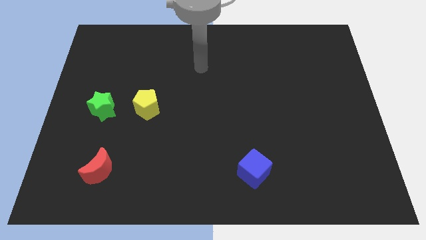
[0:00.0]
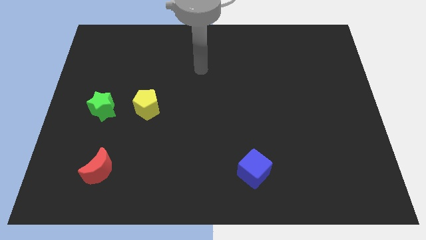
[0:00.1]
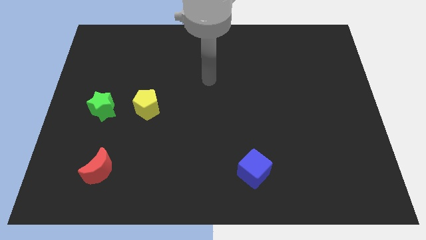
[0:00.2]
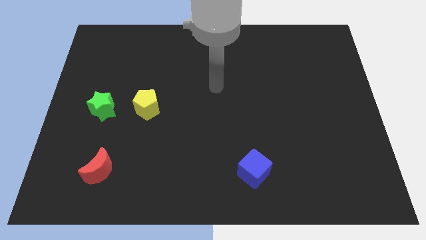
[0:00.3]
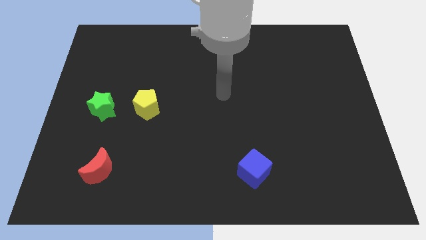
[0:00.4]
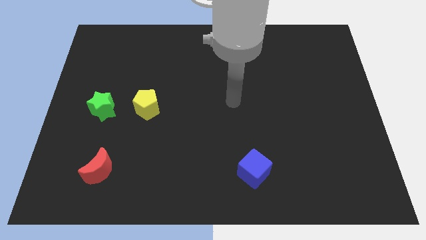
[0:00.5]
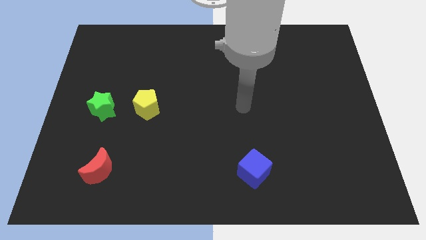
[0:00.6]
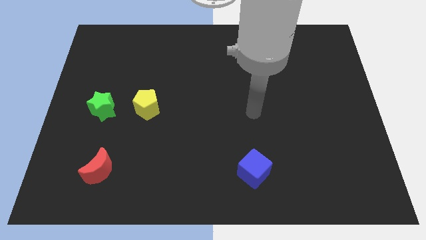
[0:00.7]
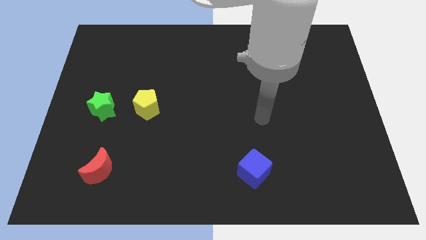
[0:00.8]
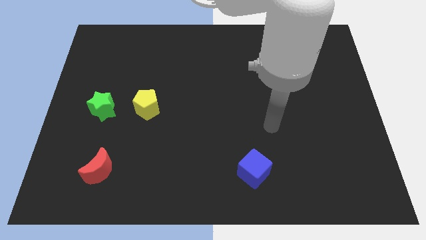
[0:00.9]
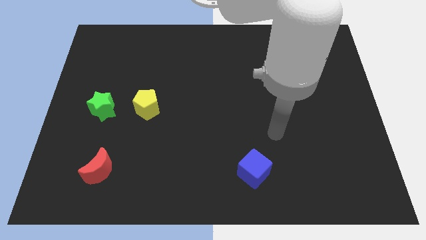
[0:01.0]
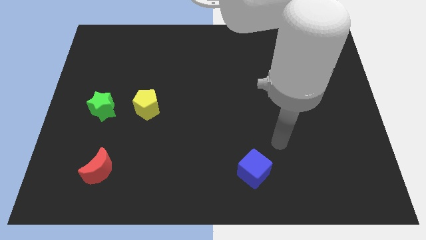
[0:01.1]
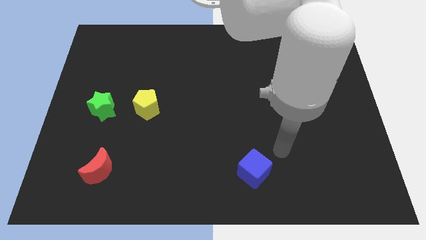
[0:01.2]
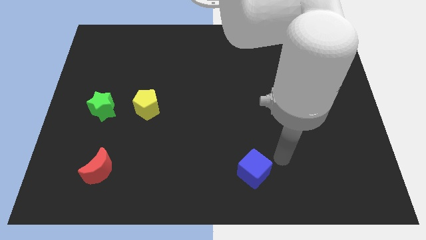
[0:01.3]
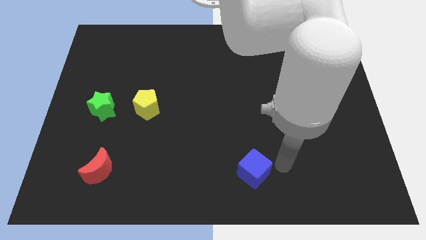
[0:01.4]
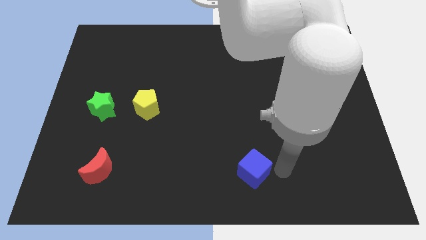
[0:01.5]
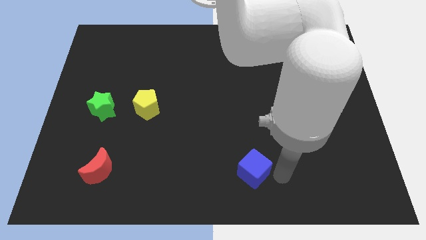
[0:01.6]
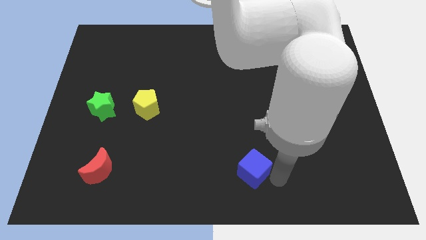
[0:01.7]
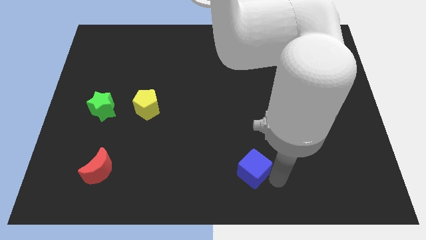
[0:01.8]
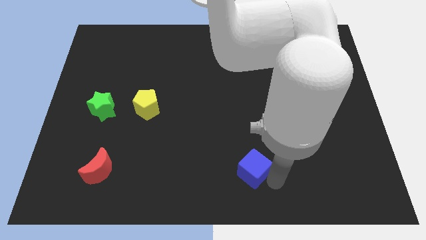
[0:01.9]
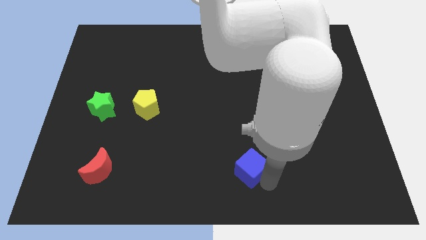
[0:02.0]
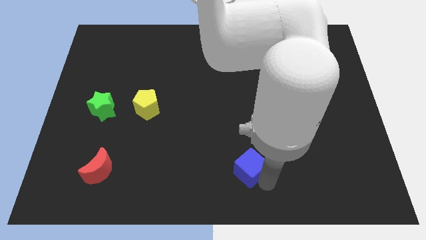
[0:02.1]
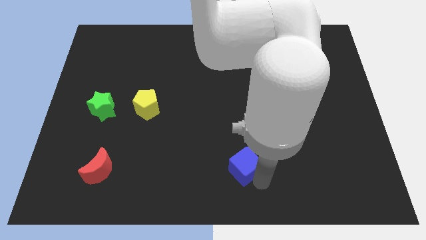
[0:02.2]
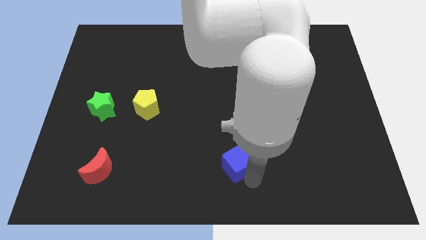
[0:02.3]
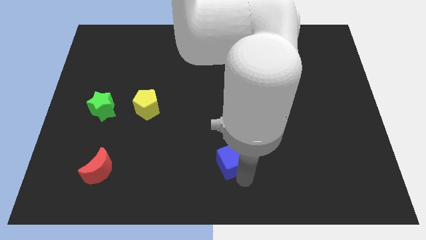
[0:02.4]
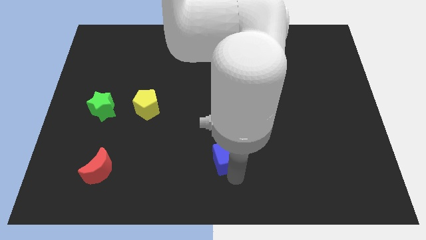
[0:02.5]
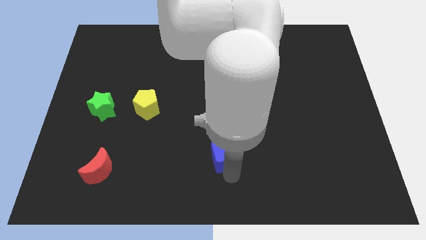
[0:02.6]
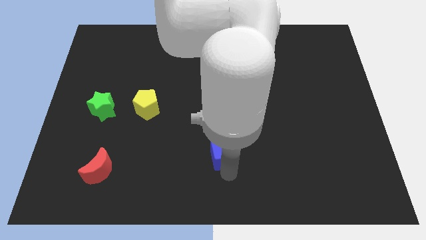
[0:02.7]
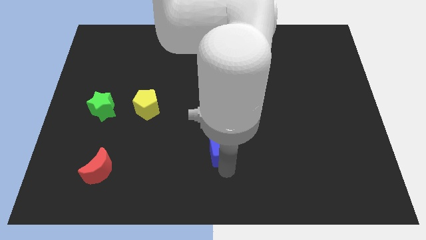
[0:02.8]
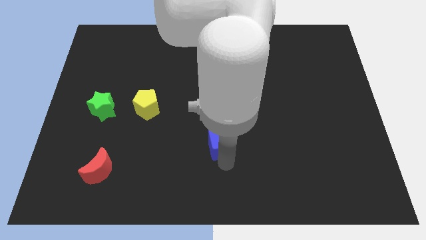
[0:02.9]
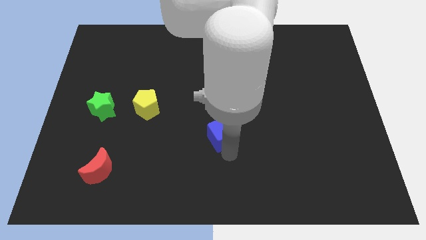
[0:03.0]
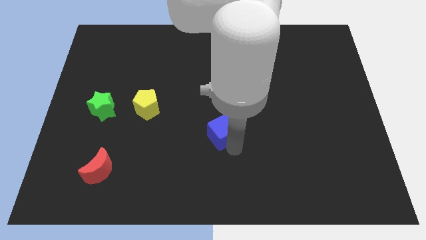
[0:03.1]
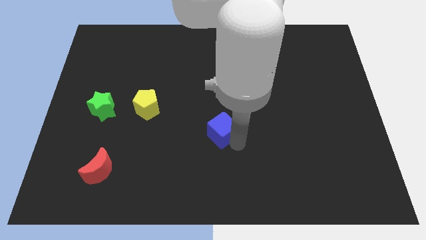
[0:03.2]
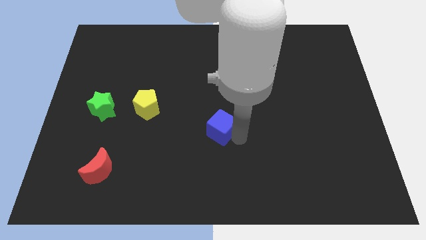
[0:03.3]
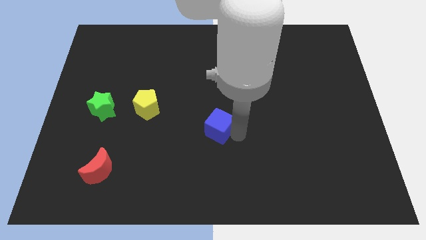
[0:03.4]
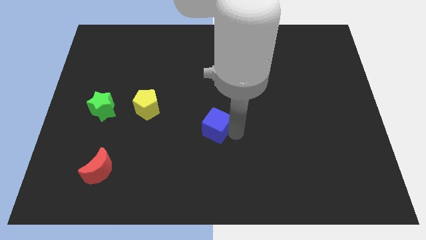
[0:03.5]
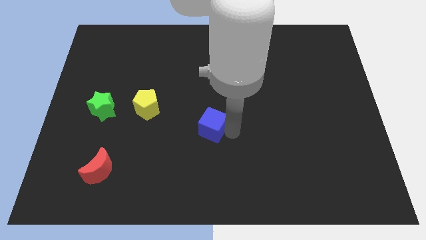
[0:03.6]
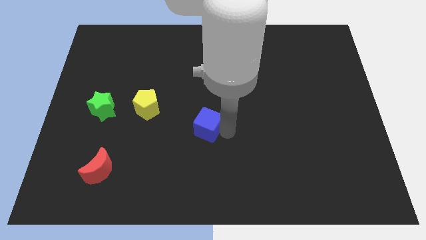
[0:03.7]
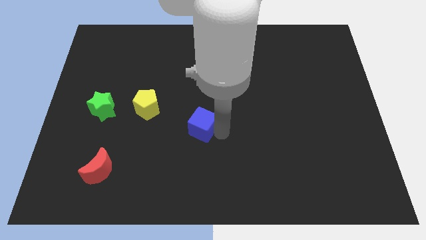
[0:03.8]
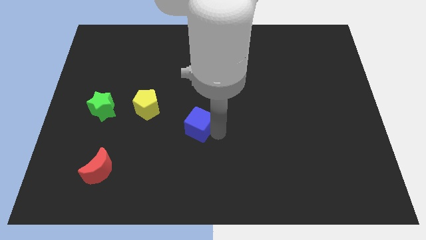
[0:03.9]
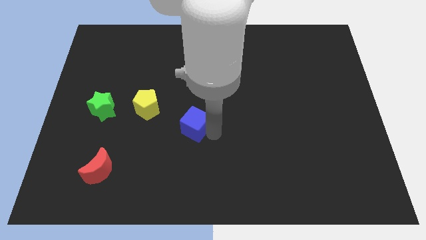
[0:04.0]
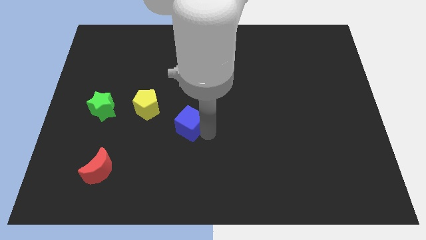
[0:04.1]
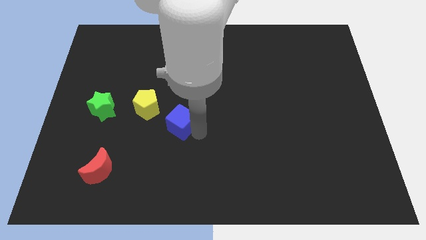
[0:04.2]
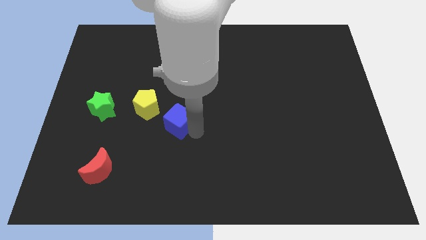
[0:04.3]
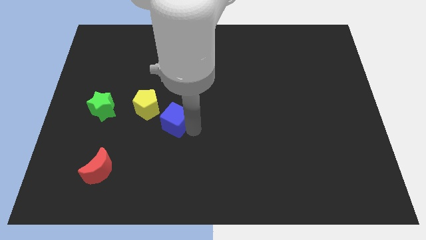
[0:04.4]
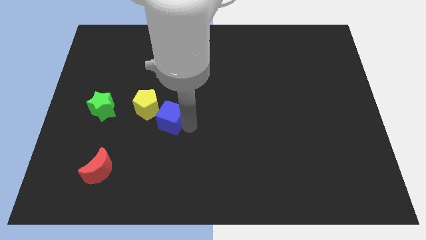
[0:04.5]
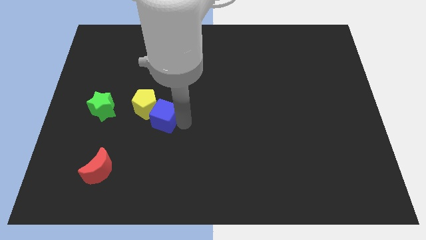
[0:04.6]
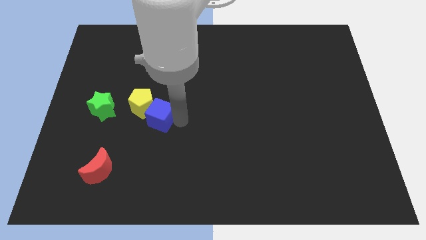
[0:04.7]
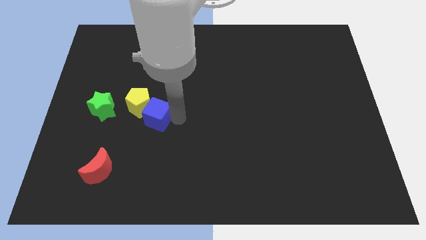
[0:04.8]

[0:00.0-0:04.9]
put the blue cube towards the pentagon

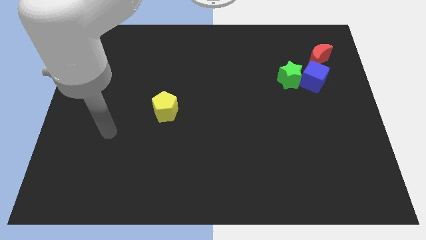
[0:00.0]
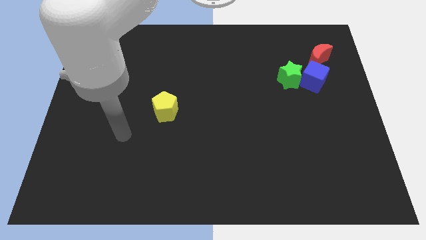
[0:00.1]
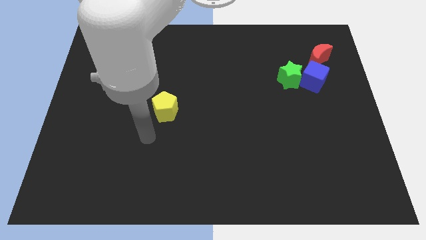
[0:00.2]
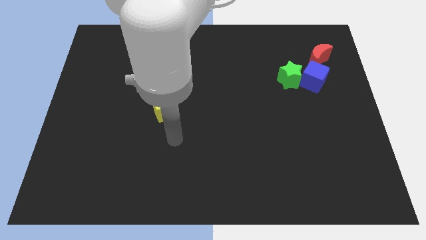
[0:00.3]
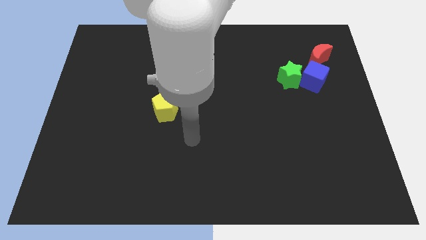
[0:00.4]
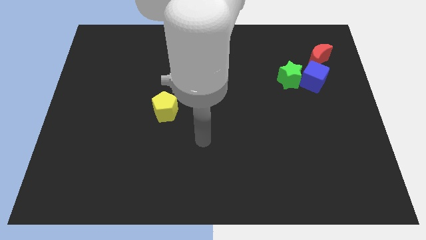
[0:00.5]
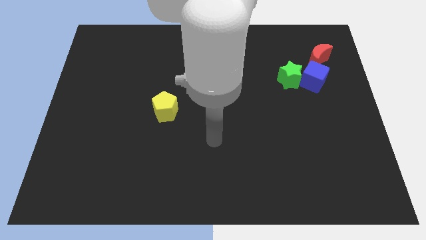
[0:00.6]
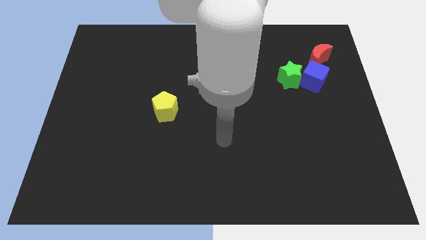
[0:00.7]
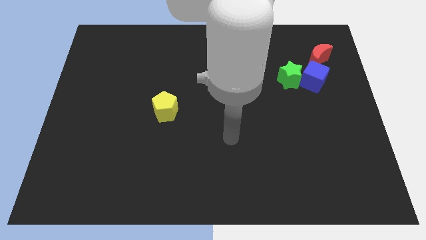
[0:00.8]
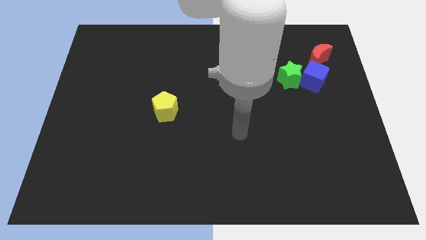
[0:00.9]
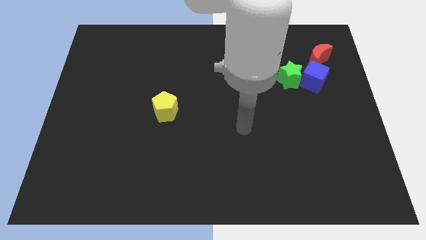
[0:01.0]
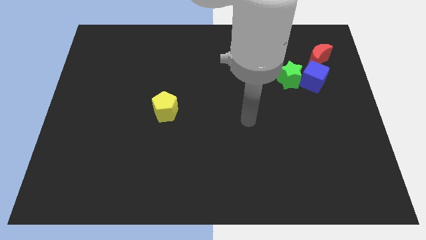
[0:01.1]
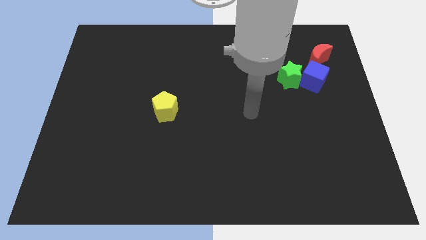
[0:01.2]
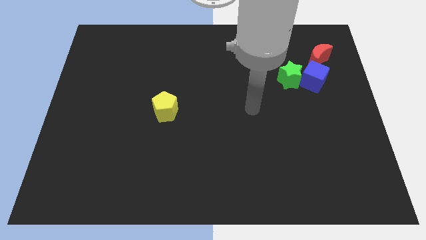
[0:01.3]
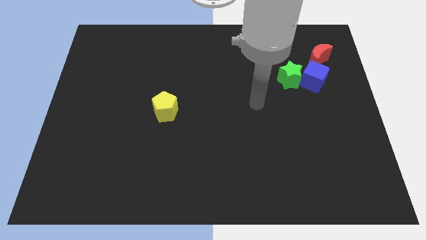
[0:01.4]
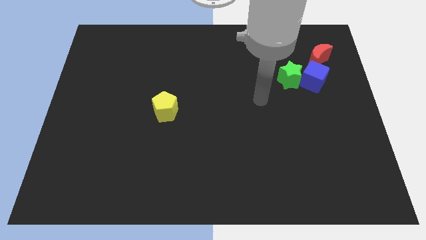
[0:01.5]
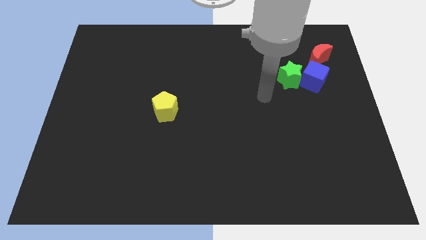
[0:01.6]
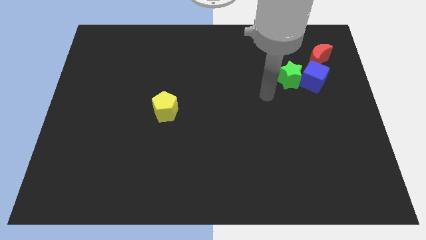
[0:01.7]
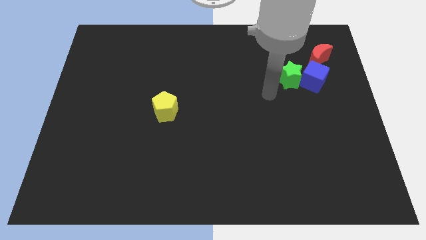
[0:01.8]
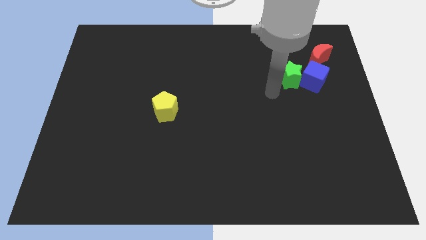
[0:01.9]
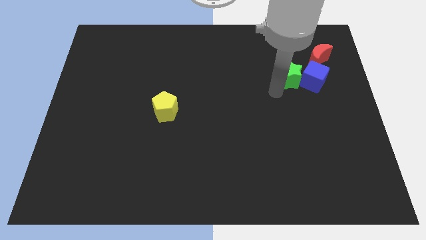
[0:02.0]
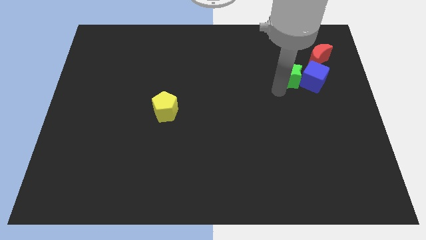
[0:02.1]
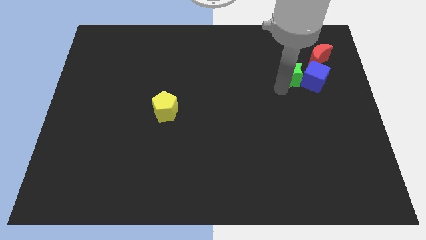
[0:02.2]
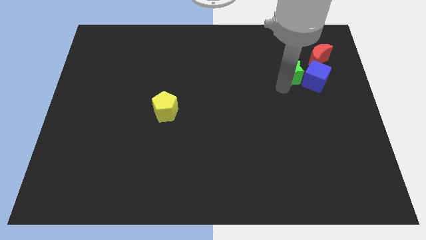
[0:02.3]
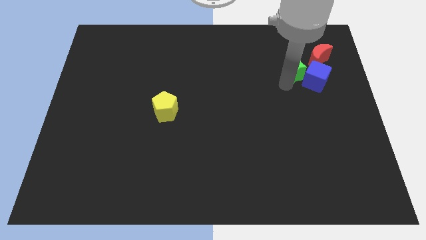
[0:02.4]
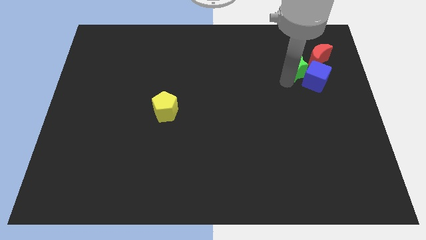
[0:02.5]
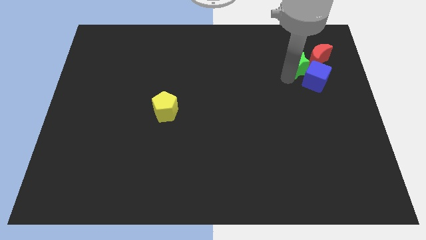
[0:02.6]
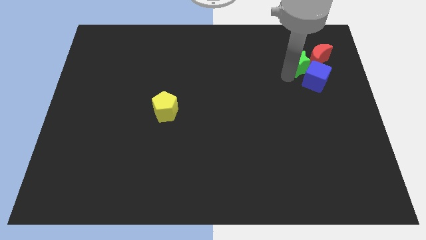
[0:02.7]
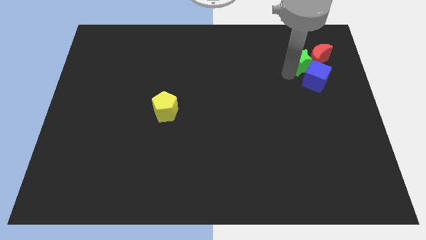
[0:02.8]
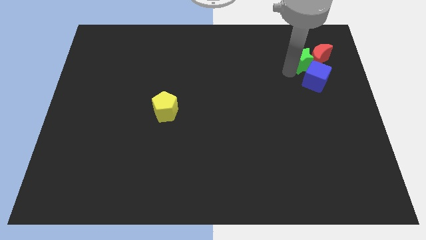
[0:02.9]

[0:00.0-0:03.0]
move the green star next to the moon

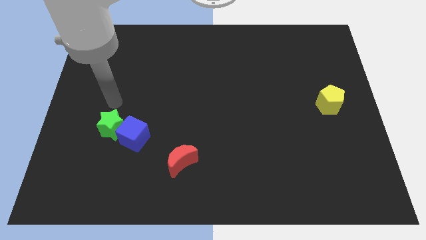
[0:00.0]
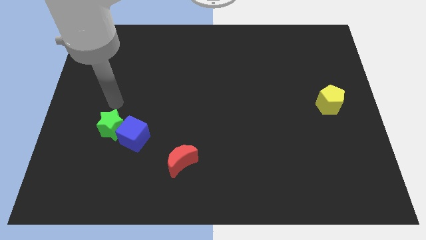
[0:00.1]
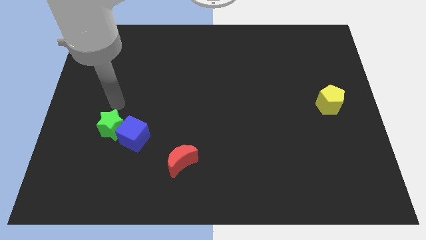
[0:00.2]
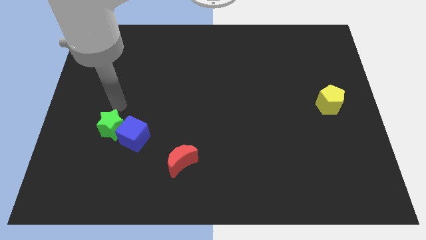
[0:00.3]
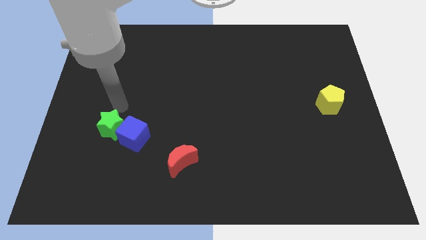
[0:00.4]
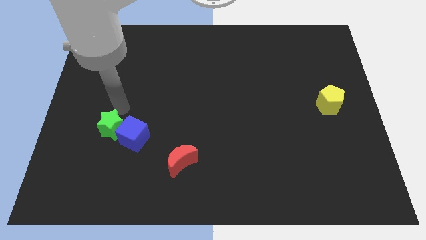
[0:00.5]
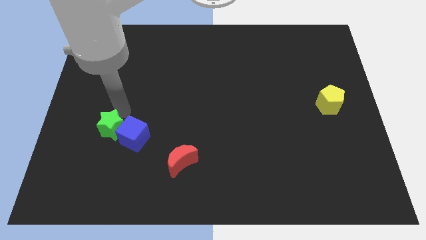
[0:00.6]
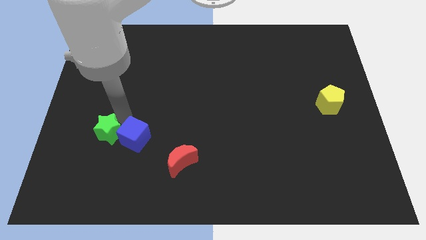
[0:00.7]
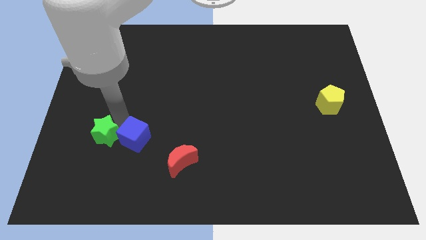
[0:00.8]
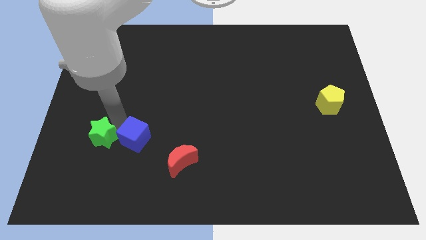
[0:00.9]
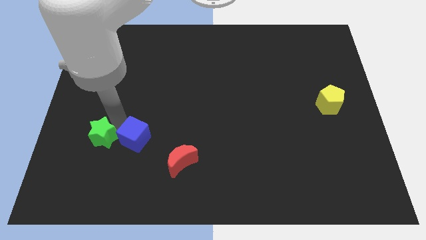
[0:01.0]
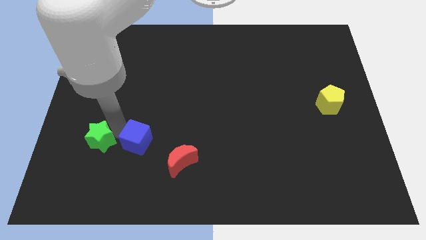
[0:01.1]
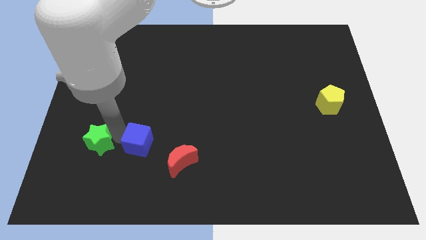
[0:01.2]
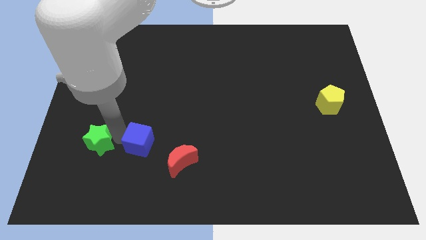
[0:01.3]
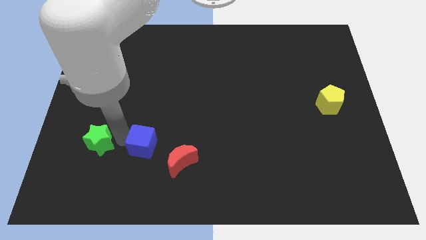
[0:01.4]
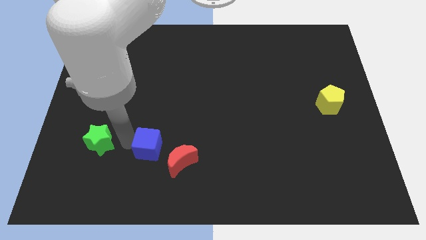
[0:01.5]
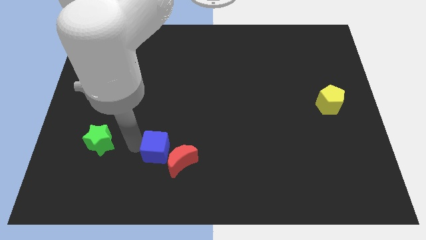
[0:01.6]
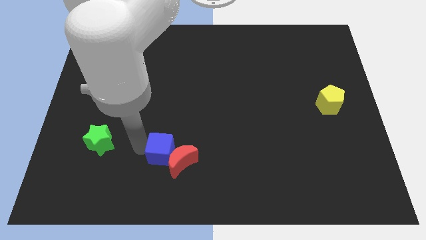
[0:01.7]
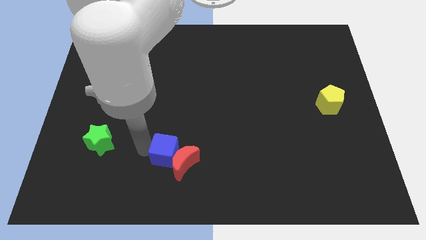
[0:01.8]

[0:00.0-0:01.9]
push the cube to the red block
